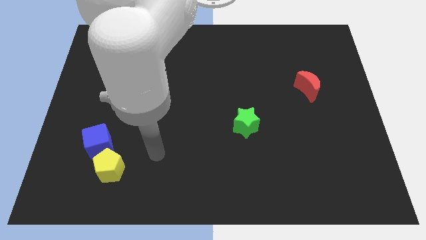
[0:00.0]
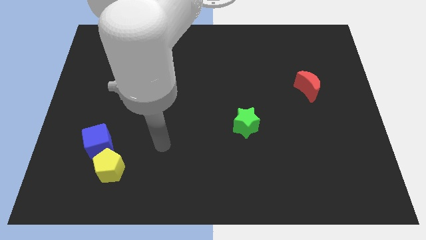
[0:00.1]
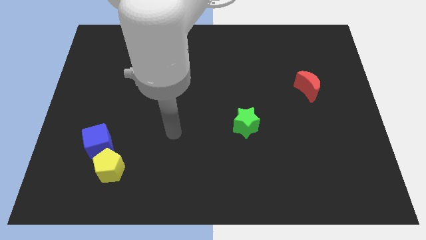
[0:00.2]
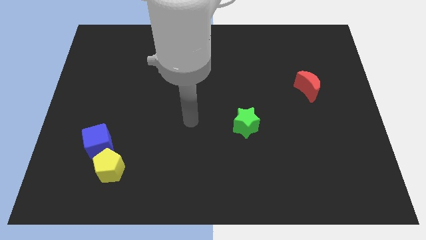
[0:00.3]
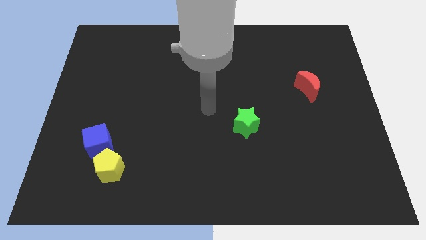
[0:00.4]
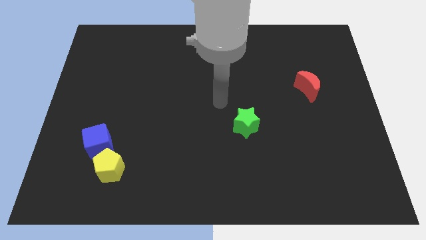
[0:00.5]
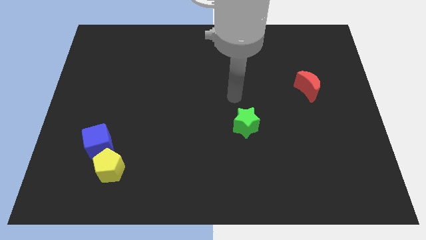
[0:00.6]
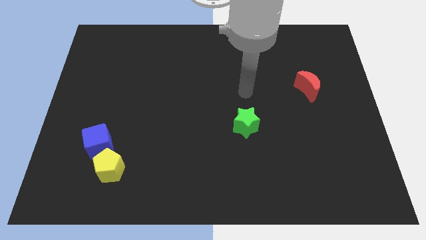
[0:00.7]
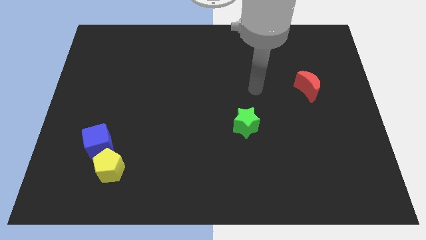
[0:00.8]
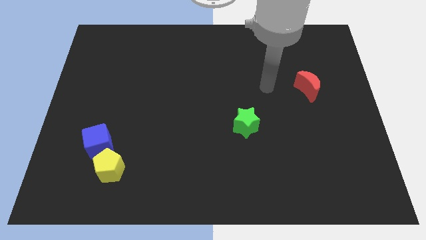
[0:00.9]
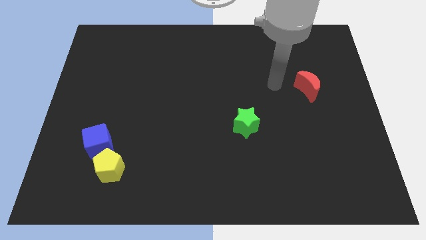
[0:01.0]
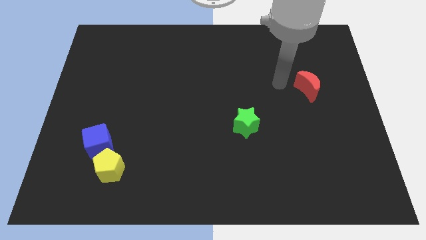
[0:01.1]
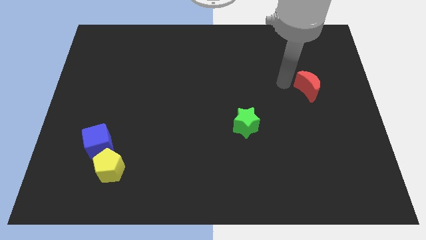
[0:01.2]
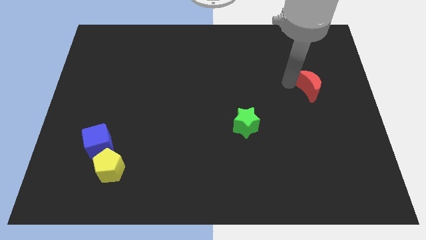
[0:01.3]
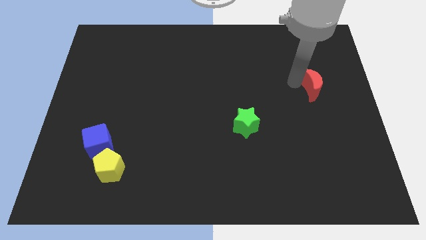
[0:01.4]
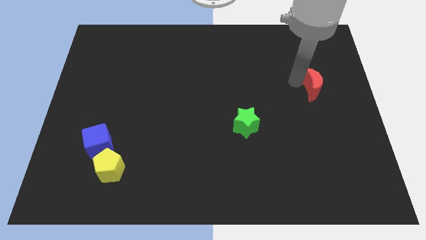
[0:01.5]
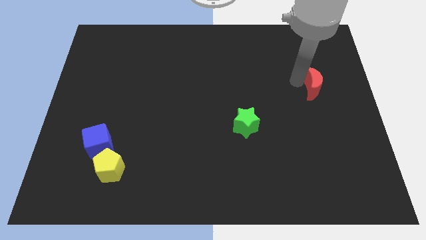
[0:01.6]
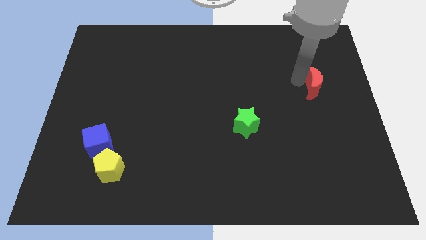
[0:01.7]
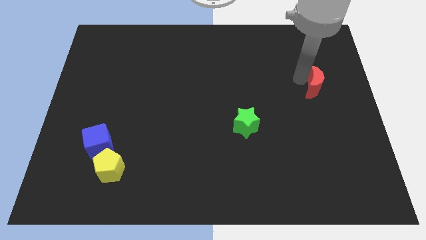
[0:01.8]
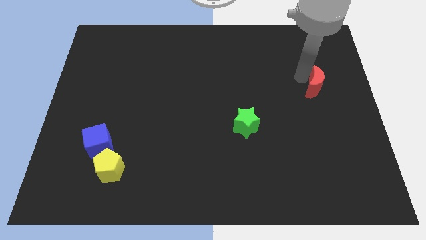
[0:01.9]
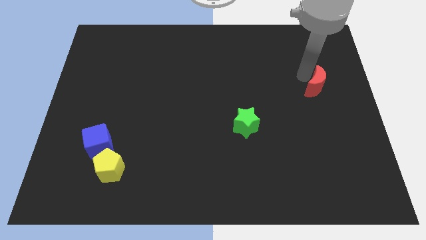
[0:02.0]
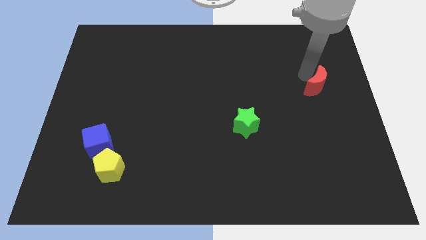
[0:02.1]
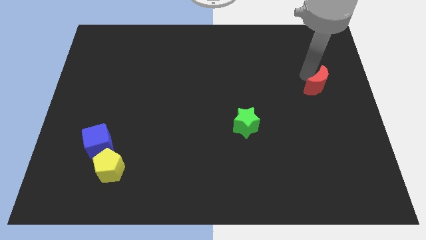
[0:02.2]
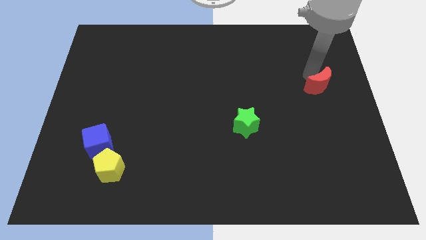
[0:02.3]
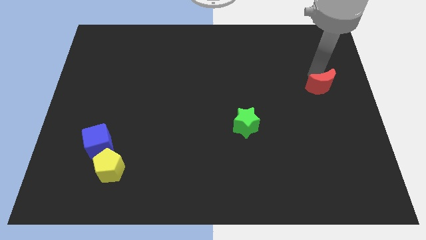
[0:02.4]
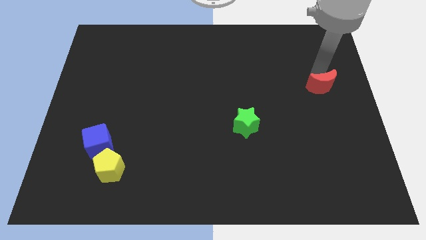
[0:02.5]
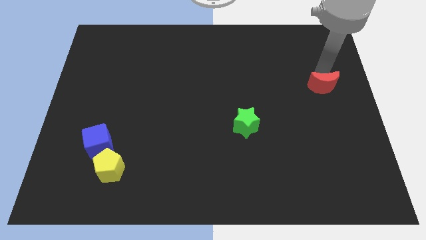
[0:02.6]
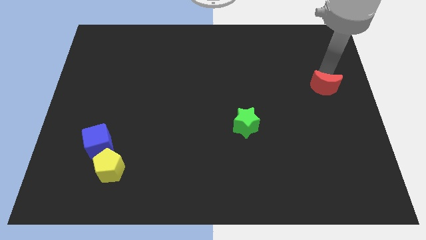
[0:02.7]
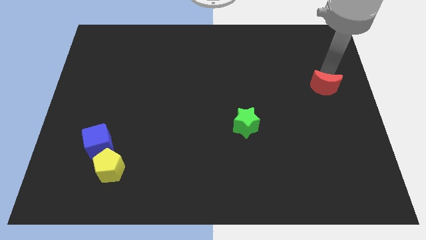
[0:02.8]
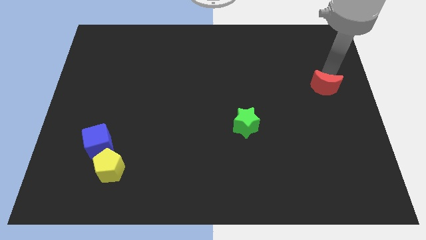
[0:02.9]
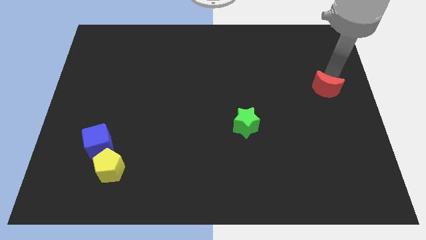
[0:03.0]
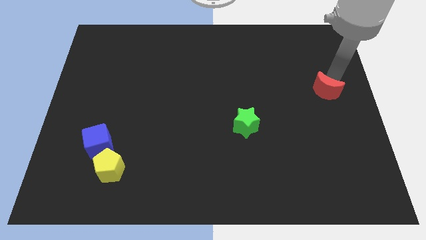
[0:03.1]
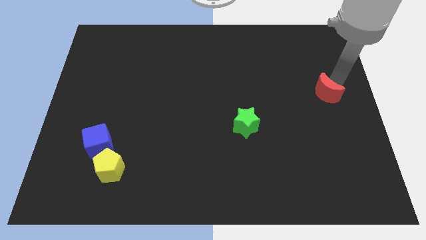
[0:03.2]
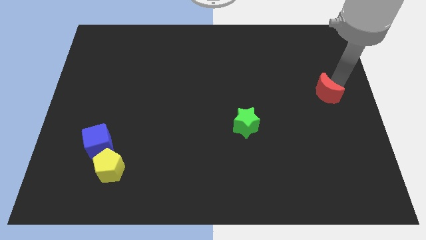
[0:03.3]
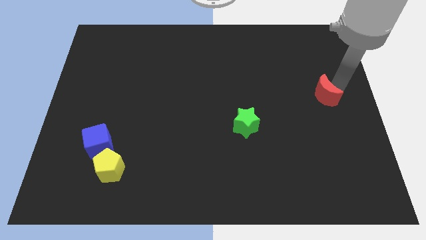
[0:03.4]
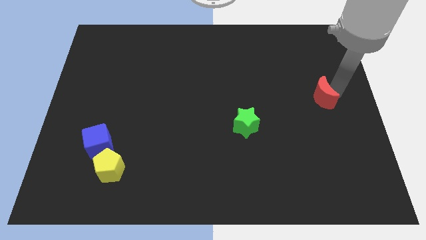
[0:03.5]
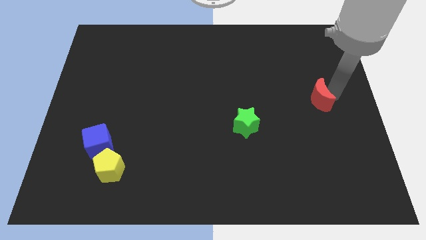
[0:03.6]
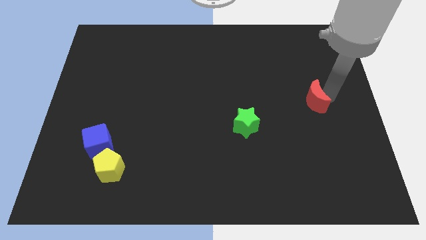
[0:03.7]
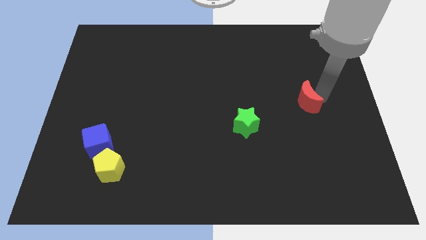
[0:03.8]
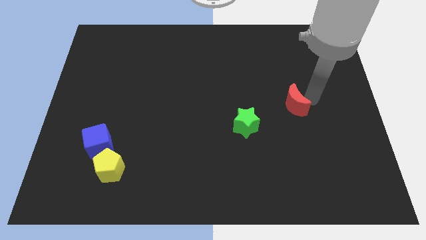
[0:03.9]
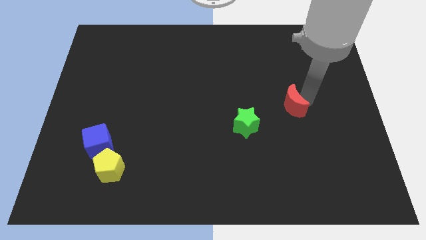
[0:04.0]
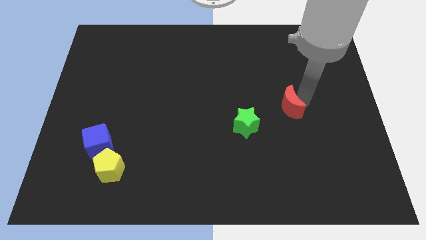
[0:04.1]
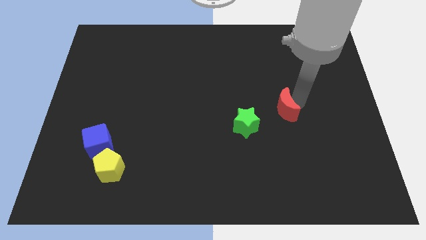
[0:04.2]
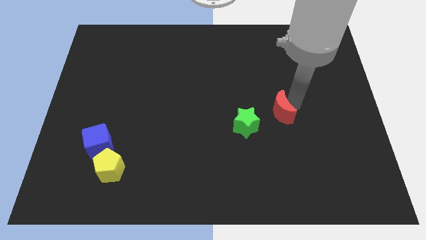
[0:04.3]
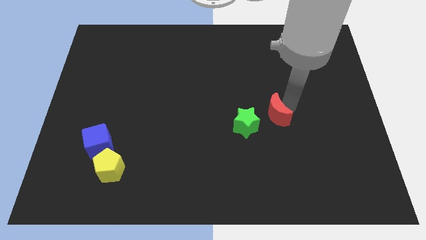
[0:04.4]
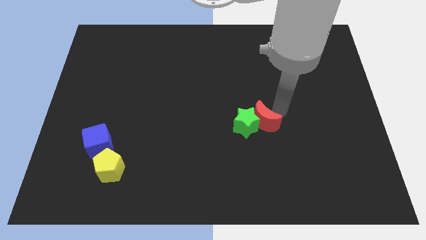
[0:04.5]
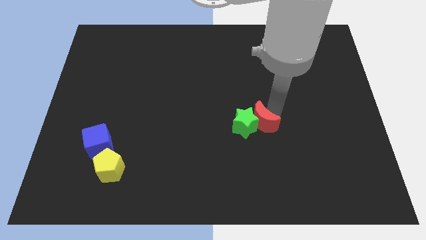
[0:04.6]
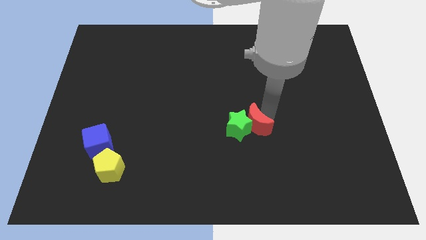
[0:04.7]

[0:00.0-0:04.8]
move the red moon to the star

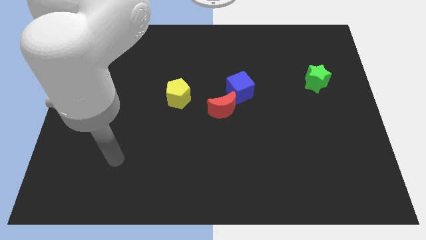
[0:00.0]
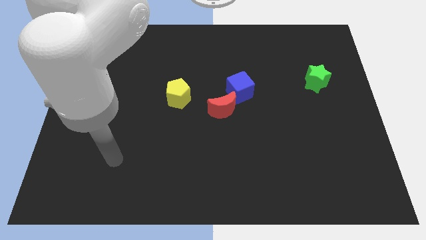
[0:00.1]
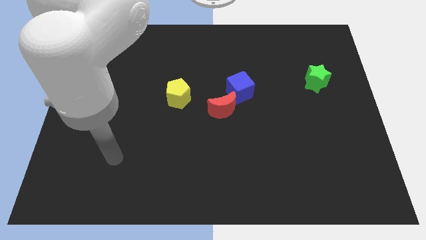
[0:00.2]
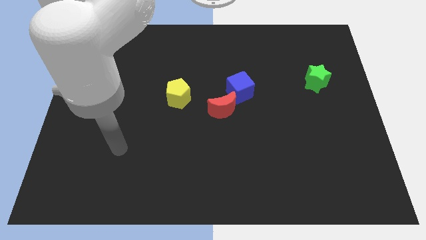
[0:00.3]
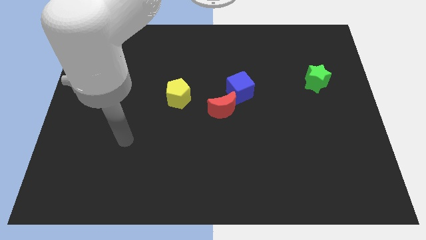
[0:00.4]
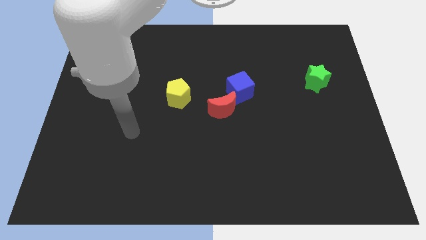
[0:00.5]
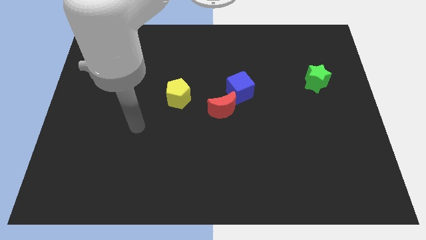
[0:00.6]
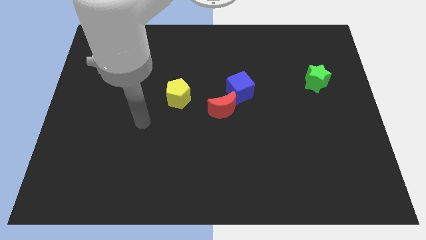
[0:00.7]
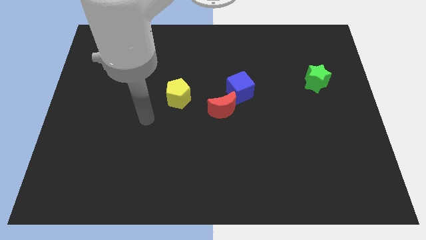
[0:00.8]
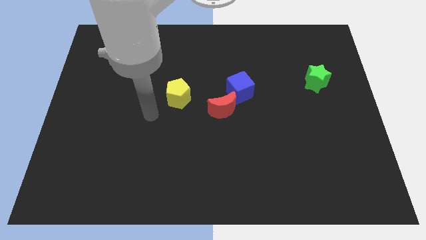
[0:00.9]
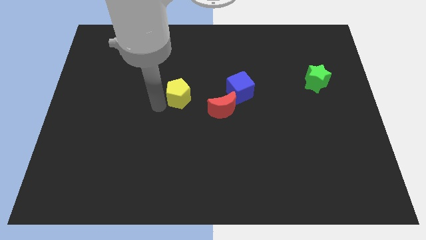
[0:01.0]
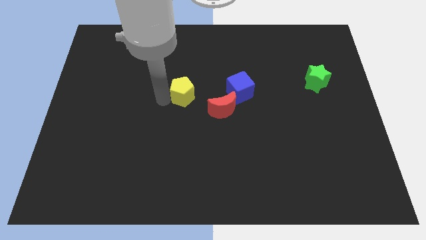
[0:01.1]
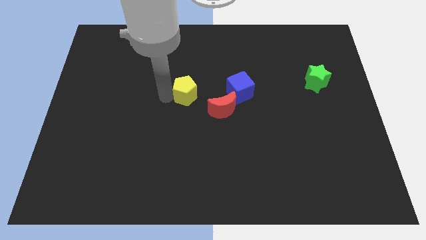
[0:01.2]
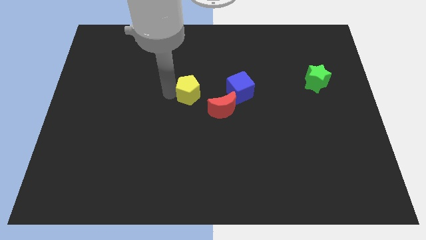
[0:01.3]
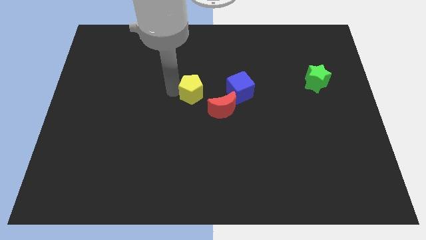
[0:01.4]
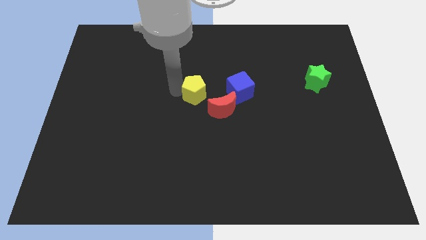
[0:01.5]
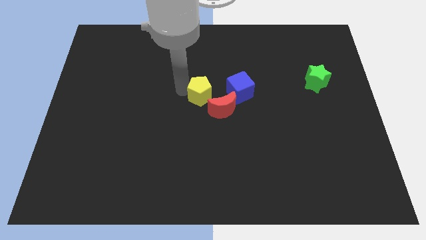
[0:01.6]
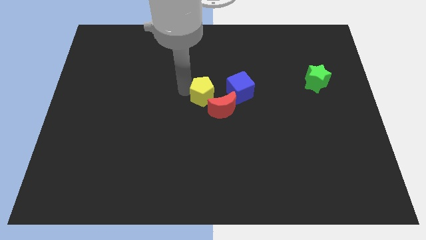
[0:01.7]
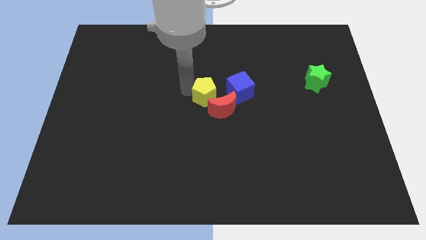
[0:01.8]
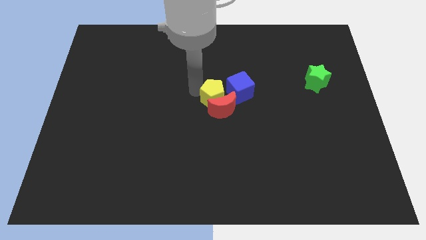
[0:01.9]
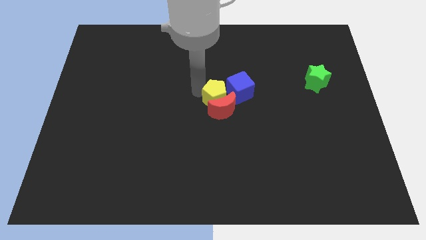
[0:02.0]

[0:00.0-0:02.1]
slide the yellow block close to the red moon

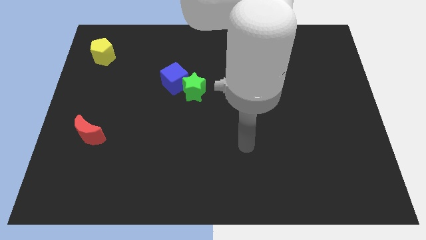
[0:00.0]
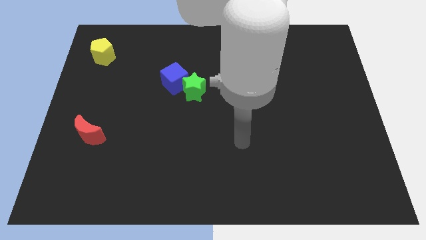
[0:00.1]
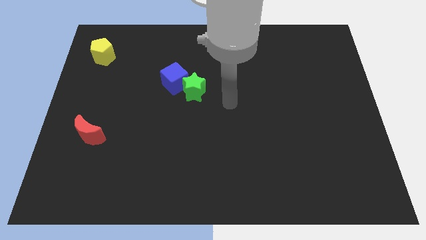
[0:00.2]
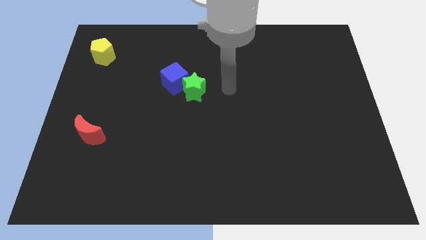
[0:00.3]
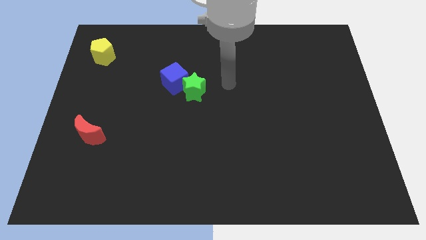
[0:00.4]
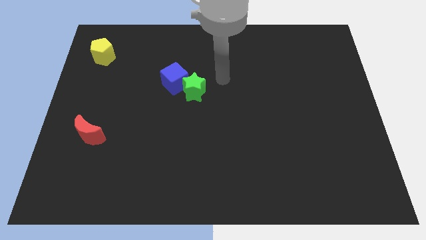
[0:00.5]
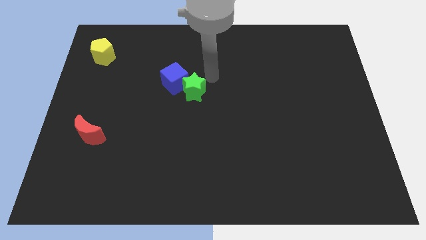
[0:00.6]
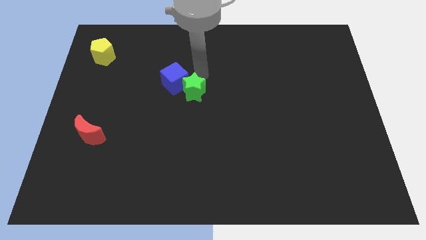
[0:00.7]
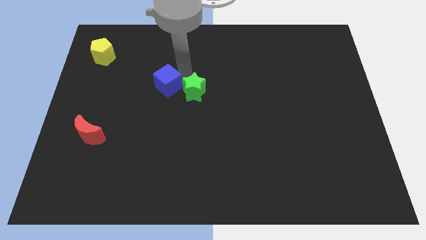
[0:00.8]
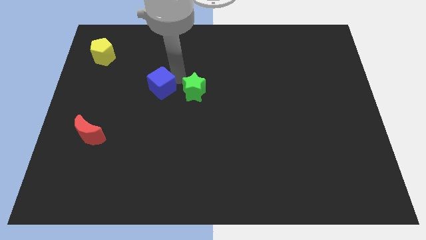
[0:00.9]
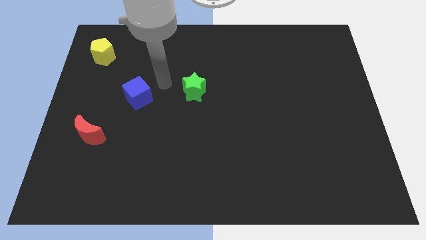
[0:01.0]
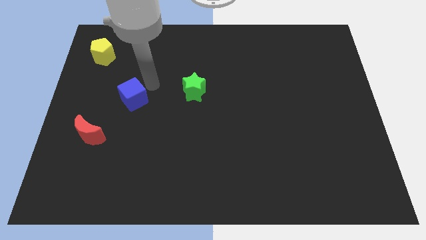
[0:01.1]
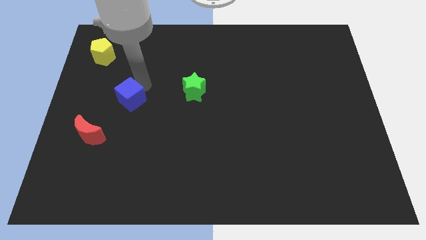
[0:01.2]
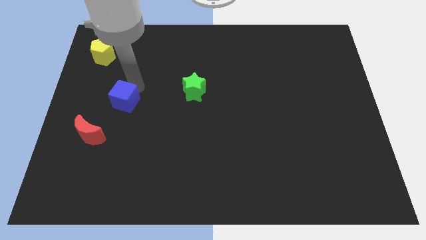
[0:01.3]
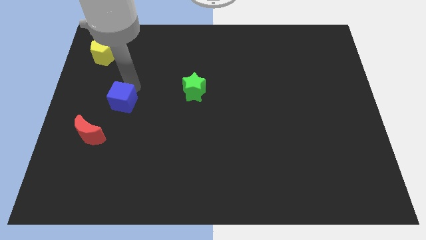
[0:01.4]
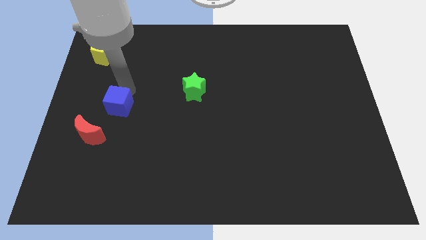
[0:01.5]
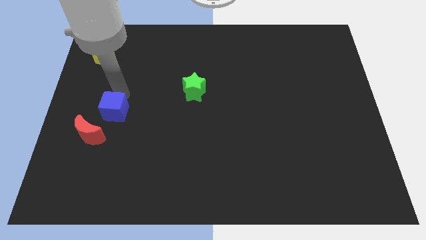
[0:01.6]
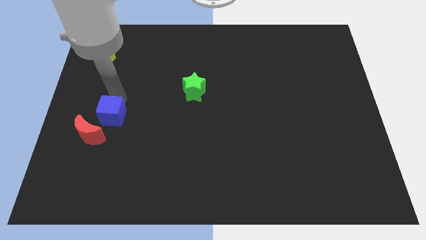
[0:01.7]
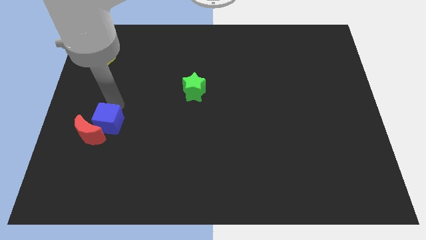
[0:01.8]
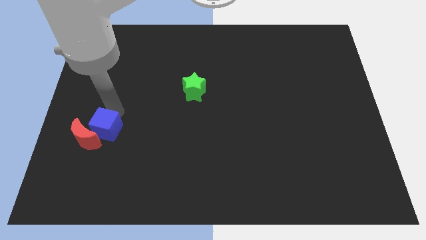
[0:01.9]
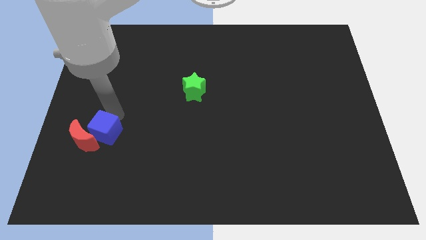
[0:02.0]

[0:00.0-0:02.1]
slide the cube close to the red moon
